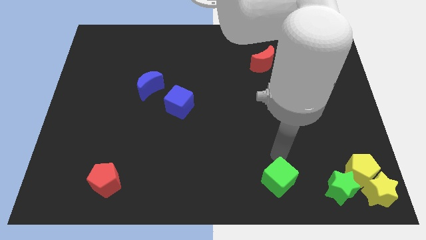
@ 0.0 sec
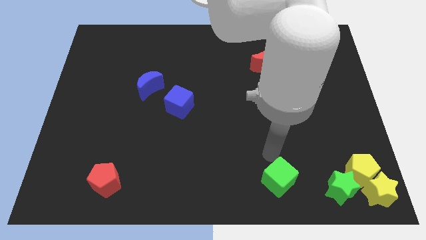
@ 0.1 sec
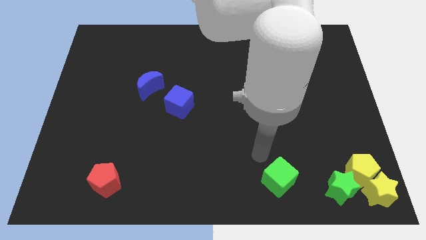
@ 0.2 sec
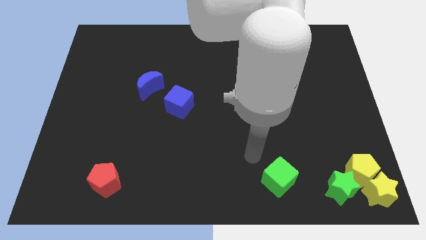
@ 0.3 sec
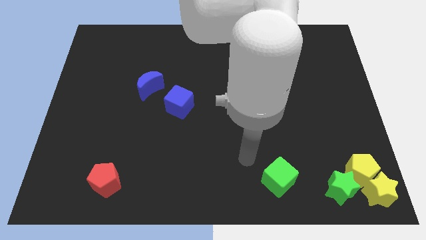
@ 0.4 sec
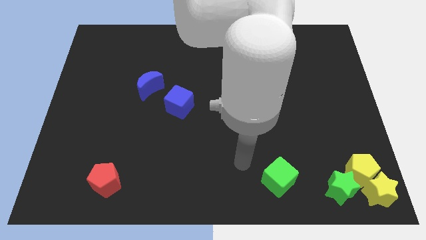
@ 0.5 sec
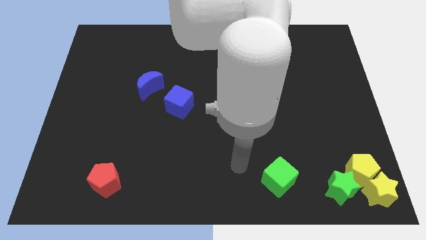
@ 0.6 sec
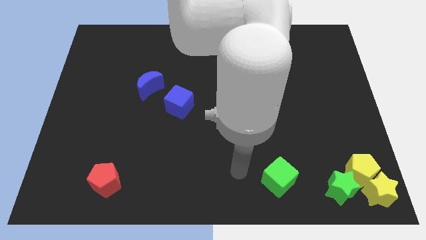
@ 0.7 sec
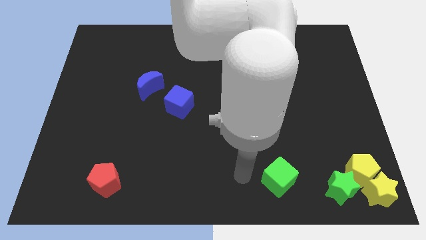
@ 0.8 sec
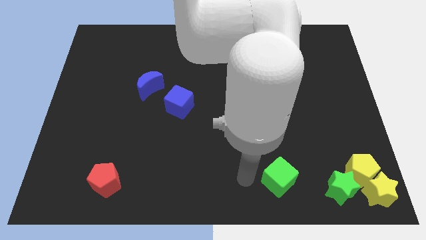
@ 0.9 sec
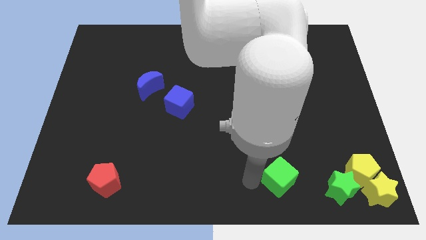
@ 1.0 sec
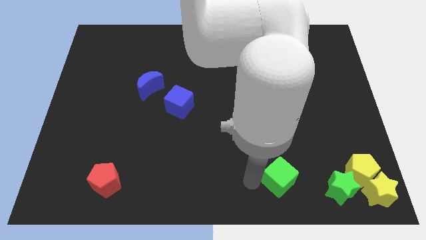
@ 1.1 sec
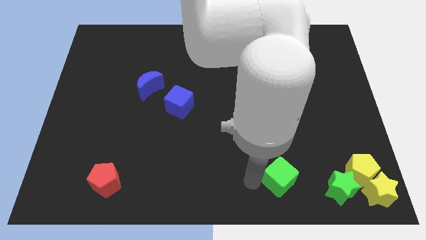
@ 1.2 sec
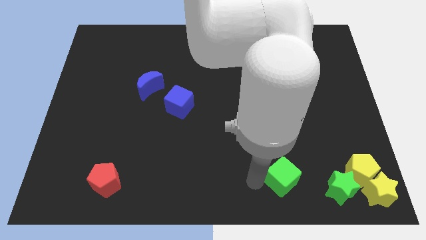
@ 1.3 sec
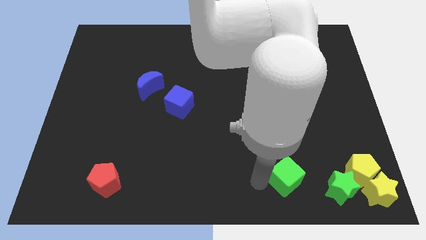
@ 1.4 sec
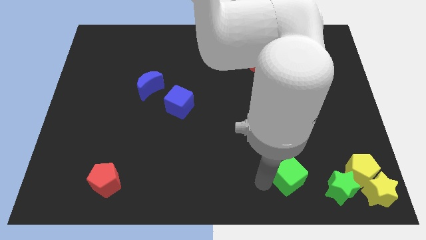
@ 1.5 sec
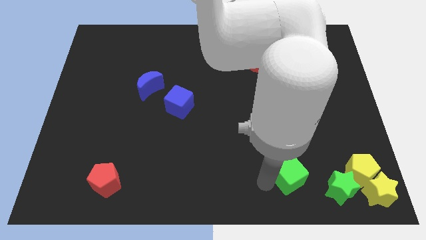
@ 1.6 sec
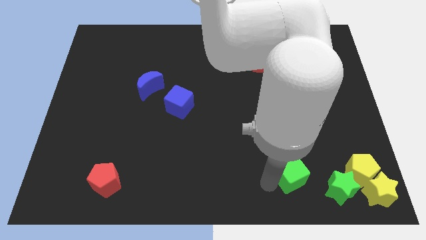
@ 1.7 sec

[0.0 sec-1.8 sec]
push green cube to the right

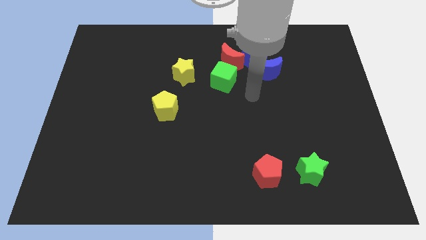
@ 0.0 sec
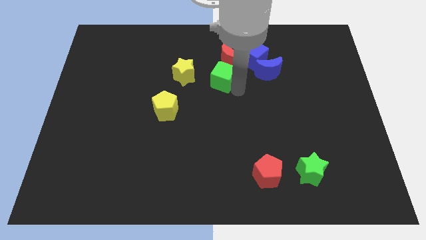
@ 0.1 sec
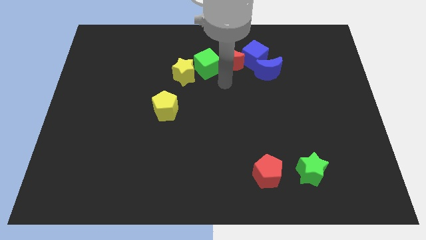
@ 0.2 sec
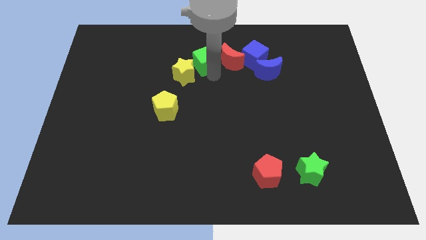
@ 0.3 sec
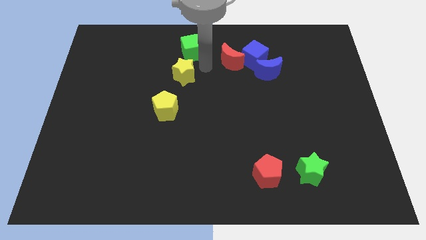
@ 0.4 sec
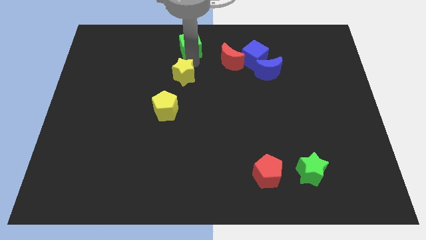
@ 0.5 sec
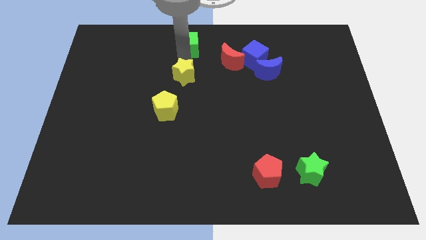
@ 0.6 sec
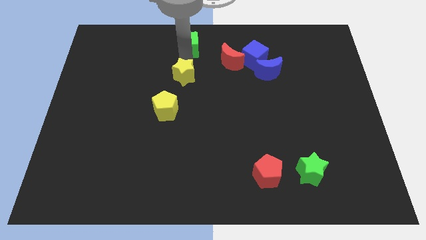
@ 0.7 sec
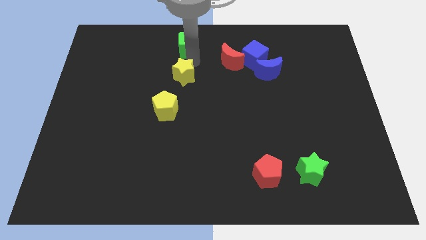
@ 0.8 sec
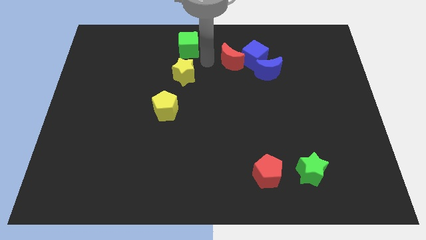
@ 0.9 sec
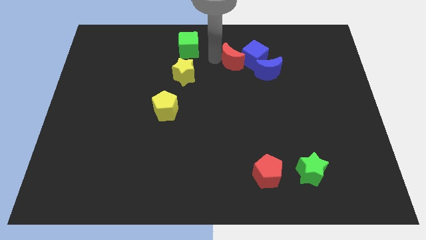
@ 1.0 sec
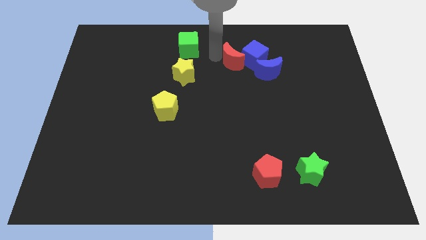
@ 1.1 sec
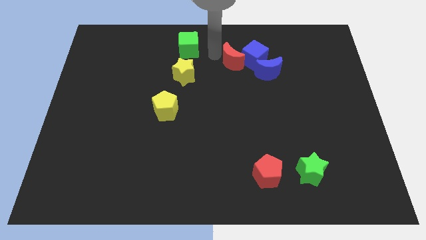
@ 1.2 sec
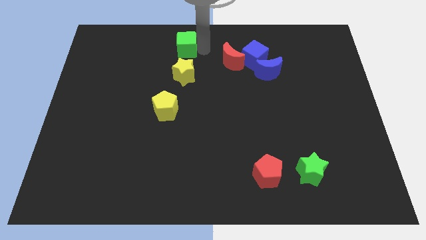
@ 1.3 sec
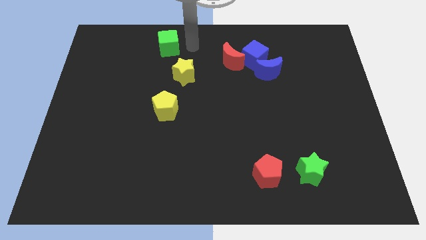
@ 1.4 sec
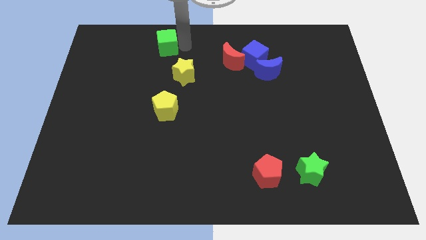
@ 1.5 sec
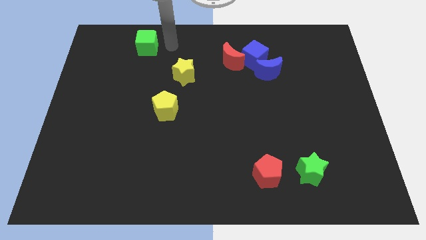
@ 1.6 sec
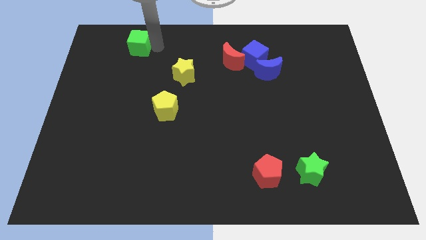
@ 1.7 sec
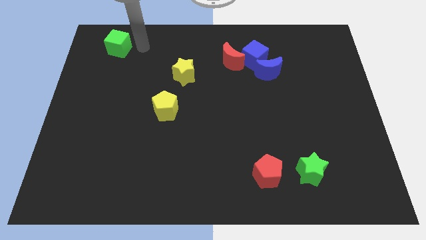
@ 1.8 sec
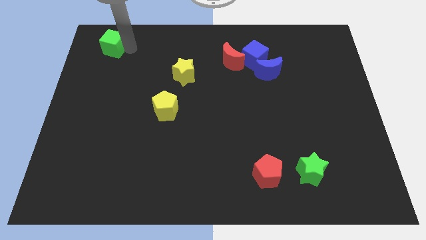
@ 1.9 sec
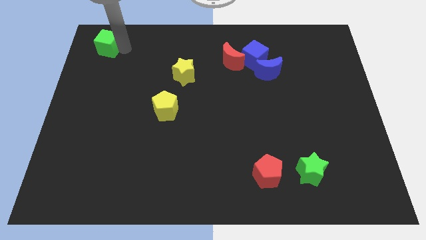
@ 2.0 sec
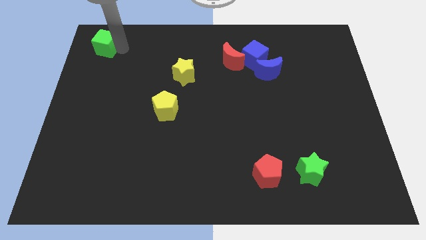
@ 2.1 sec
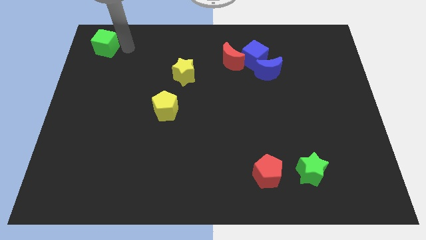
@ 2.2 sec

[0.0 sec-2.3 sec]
place the green cube to top left corner of the board

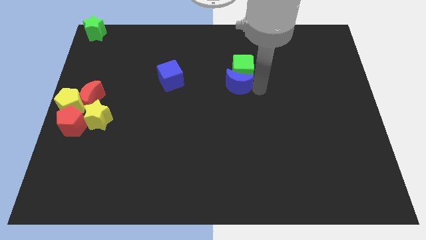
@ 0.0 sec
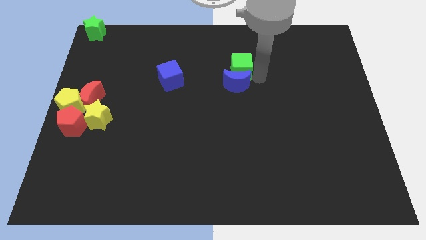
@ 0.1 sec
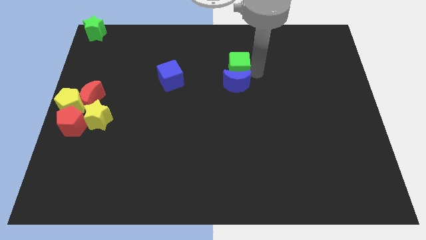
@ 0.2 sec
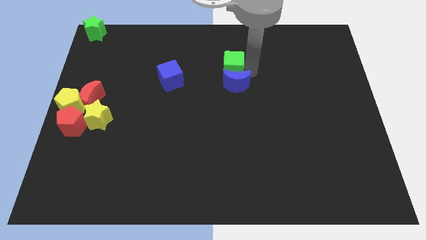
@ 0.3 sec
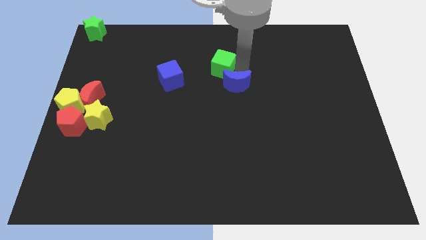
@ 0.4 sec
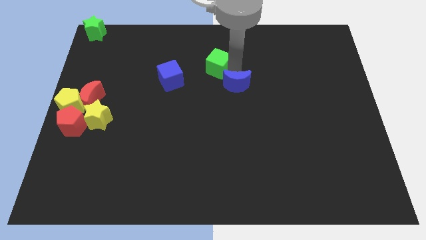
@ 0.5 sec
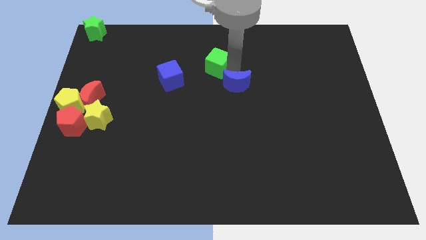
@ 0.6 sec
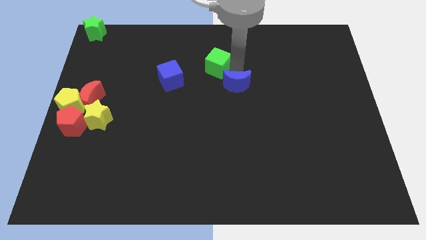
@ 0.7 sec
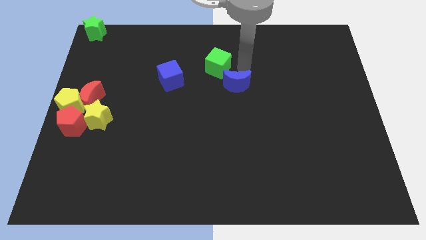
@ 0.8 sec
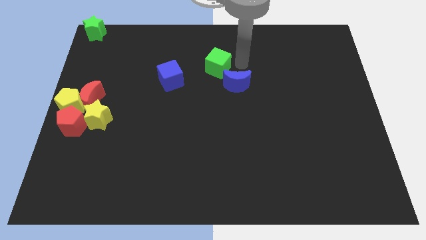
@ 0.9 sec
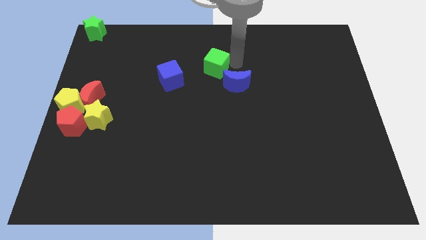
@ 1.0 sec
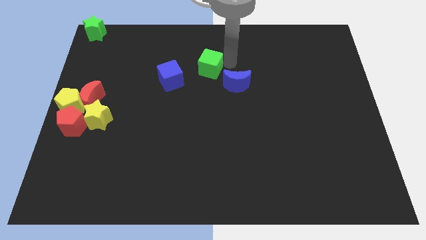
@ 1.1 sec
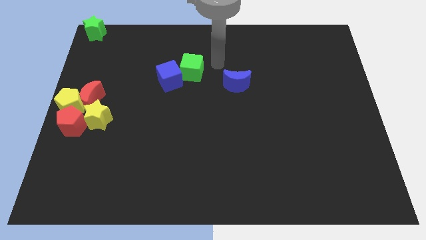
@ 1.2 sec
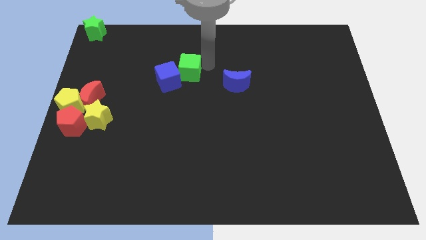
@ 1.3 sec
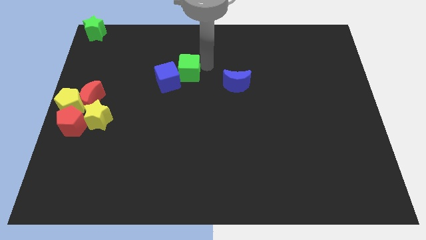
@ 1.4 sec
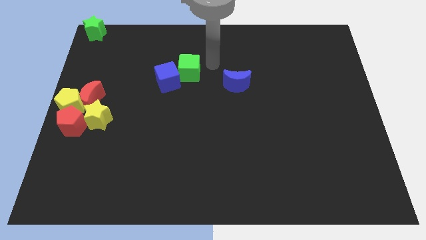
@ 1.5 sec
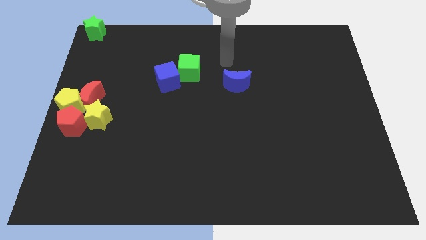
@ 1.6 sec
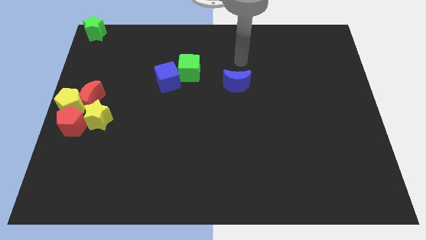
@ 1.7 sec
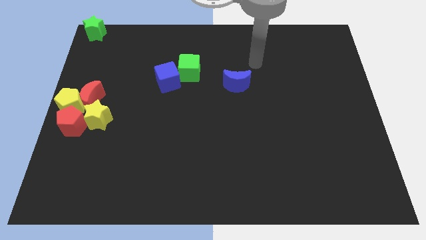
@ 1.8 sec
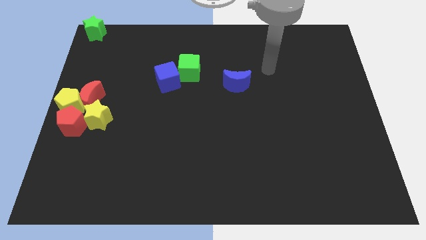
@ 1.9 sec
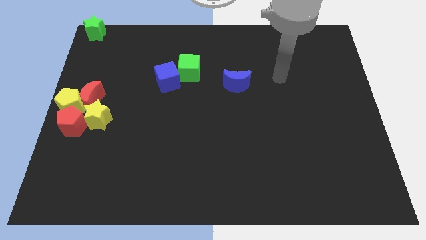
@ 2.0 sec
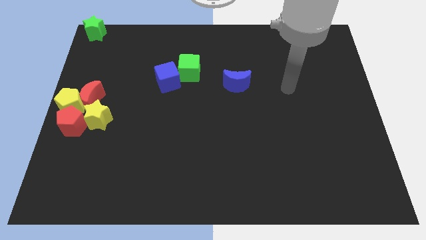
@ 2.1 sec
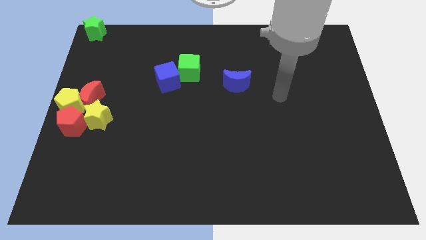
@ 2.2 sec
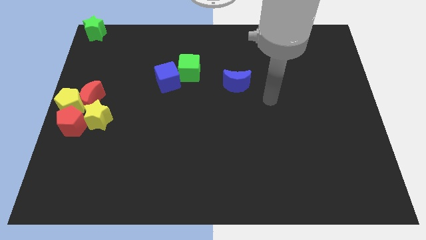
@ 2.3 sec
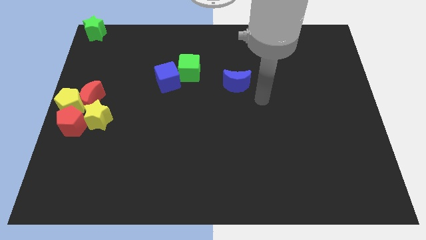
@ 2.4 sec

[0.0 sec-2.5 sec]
move the green cube into the blue cube

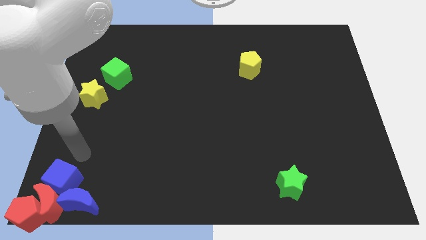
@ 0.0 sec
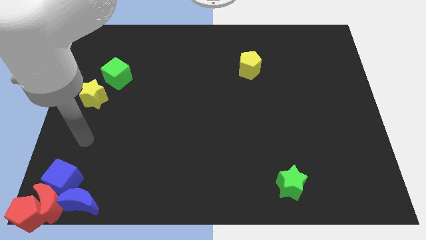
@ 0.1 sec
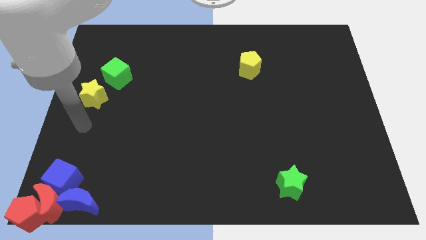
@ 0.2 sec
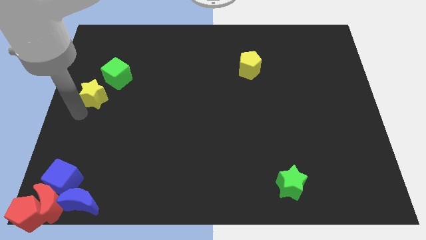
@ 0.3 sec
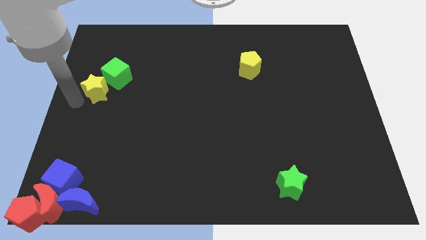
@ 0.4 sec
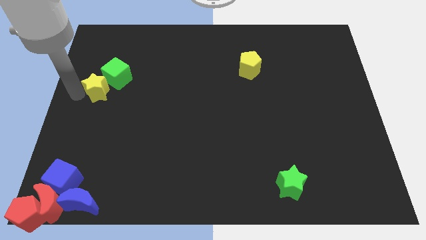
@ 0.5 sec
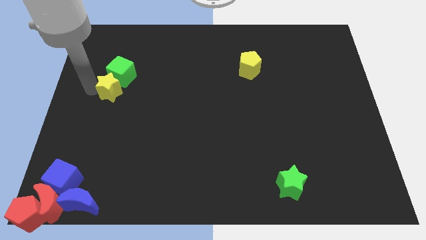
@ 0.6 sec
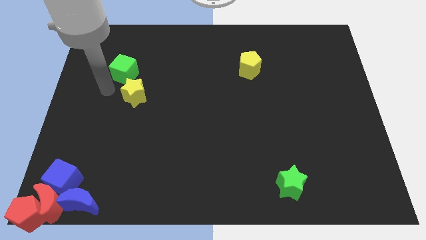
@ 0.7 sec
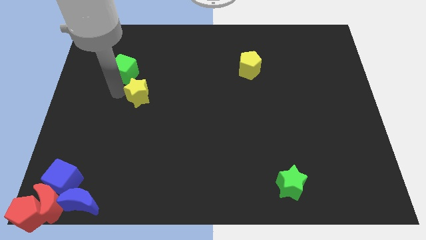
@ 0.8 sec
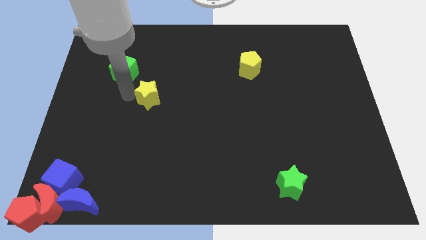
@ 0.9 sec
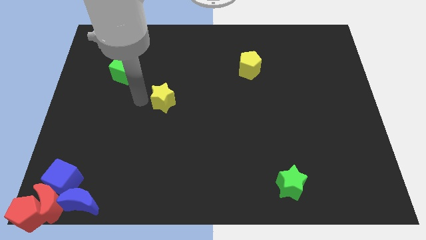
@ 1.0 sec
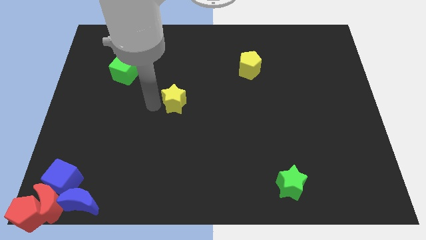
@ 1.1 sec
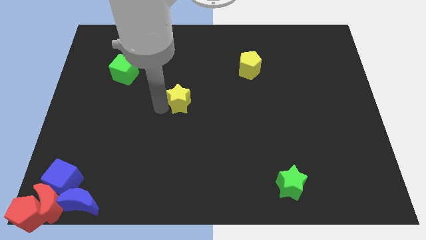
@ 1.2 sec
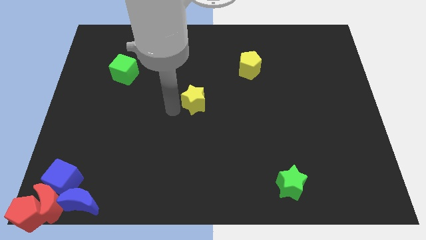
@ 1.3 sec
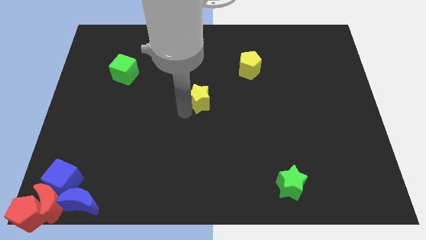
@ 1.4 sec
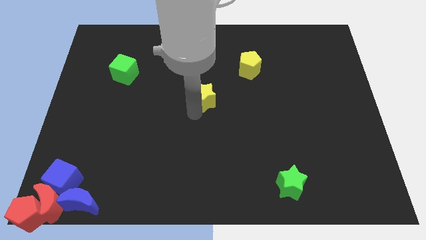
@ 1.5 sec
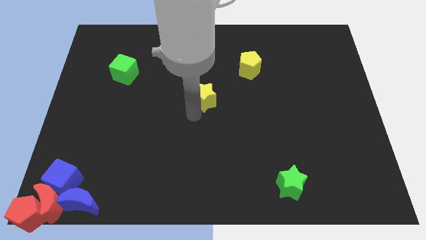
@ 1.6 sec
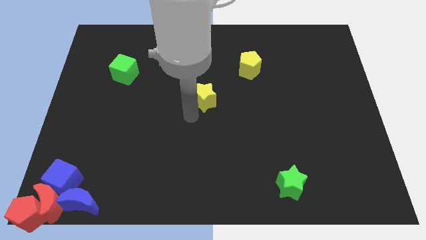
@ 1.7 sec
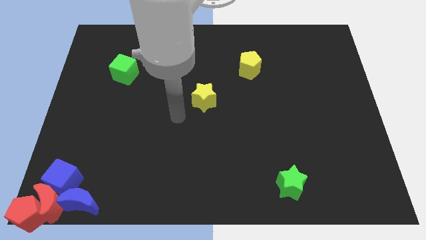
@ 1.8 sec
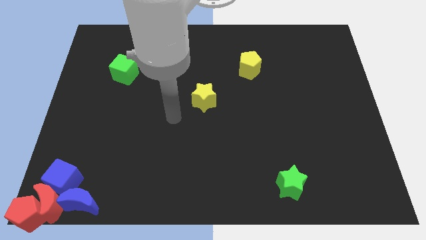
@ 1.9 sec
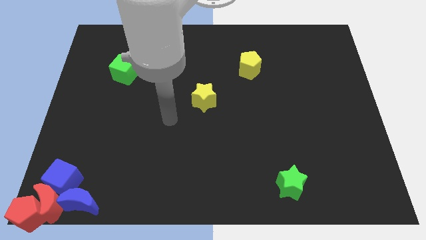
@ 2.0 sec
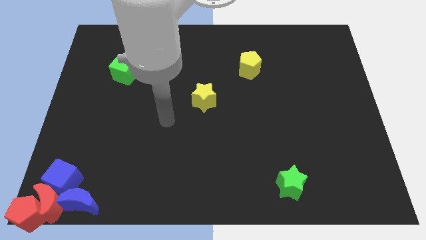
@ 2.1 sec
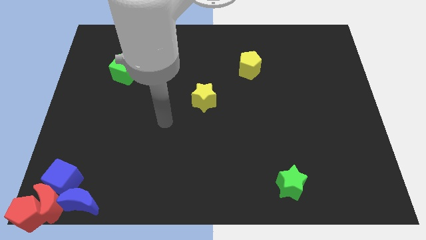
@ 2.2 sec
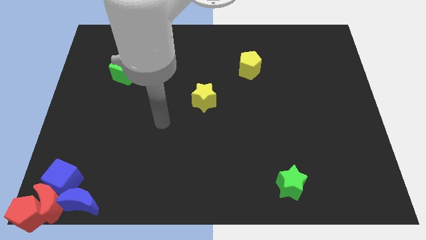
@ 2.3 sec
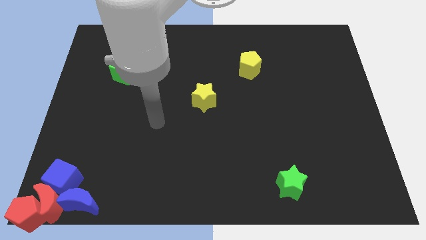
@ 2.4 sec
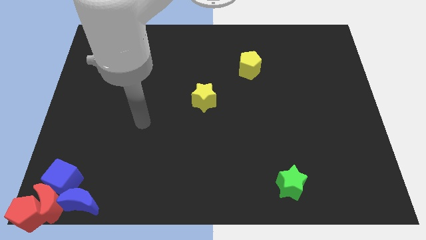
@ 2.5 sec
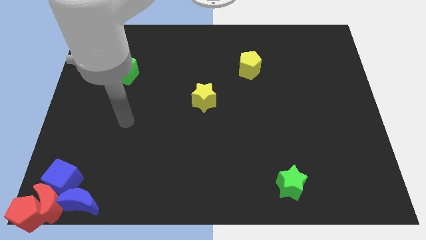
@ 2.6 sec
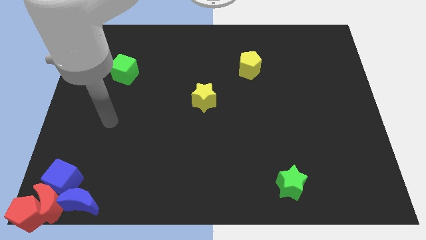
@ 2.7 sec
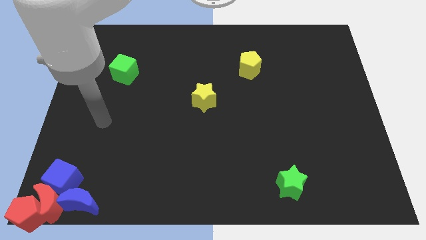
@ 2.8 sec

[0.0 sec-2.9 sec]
push the yellow star towards the right
